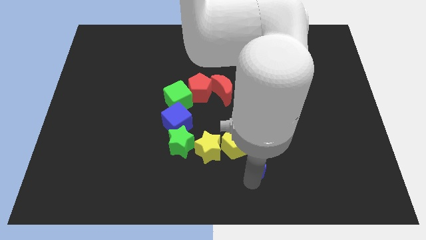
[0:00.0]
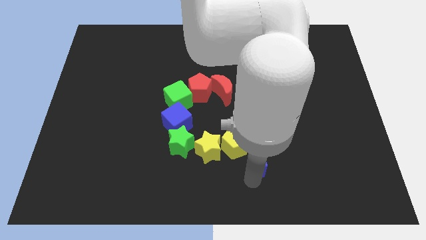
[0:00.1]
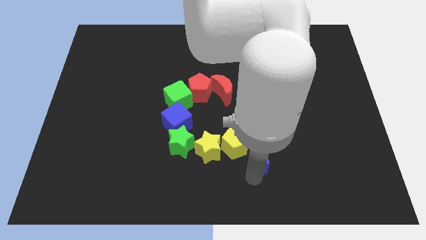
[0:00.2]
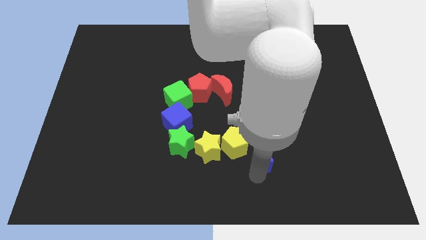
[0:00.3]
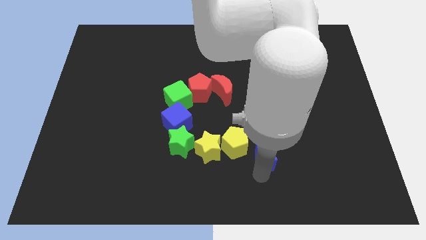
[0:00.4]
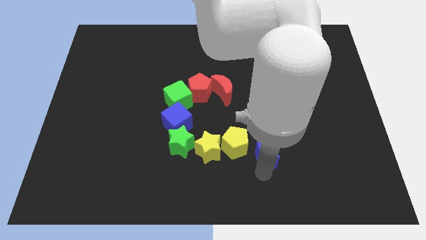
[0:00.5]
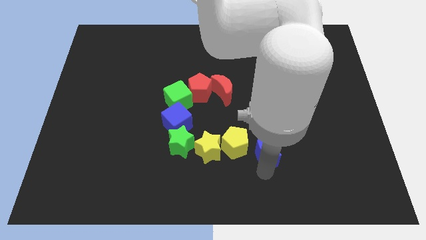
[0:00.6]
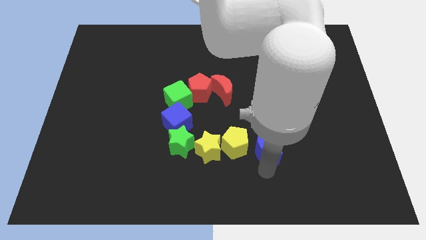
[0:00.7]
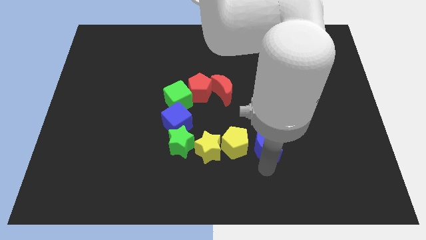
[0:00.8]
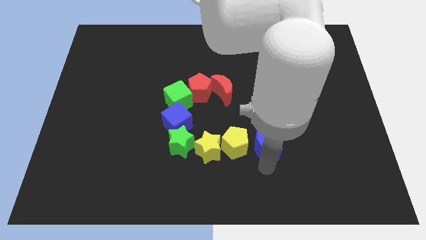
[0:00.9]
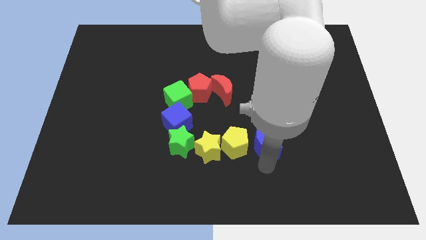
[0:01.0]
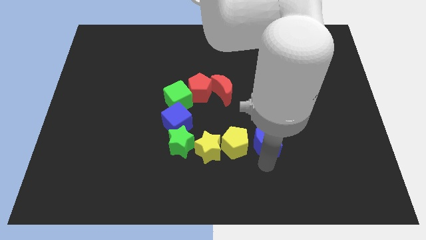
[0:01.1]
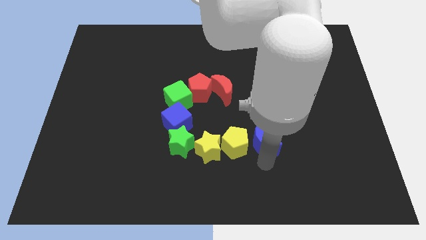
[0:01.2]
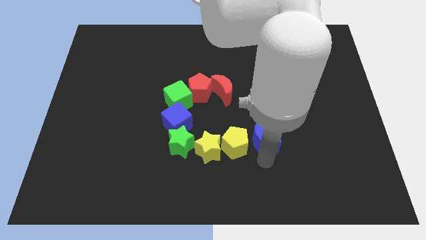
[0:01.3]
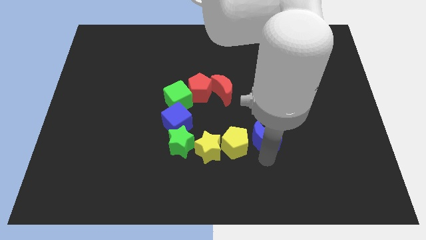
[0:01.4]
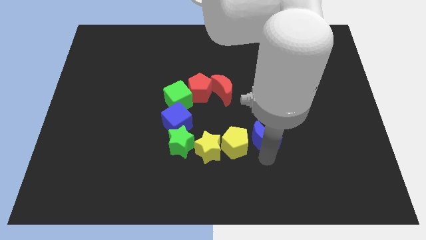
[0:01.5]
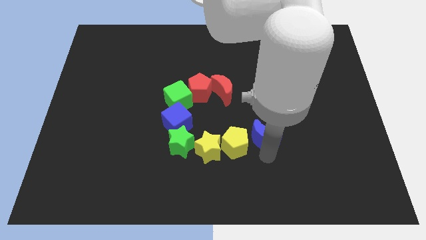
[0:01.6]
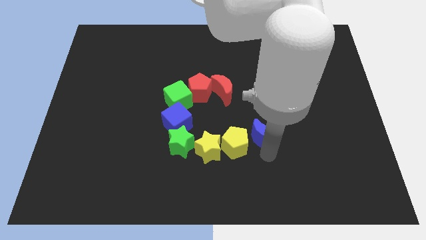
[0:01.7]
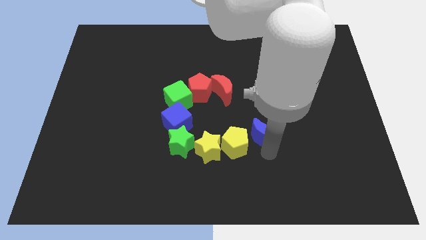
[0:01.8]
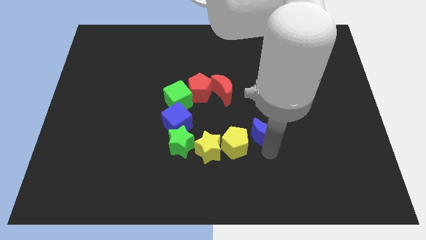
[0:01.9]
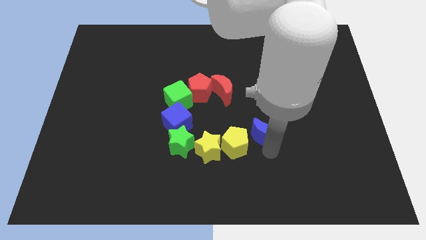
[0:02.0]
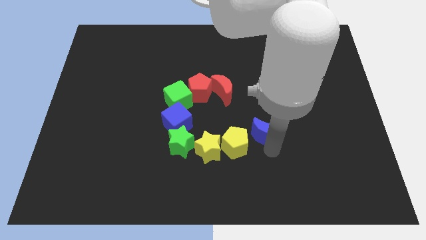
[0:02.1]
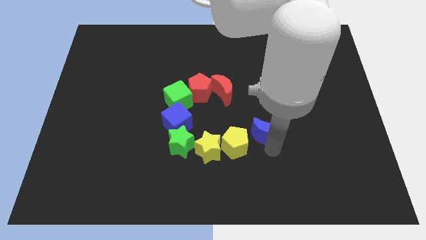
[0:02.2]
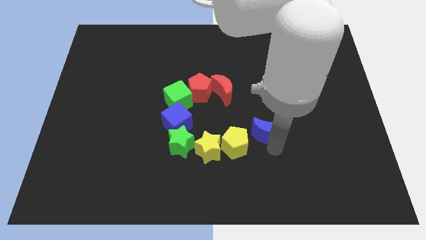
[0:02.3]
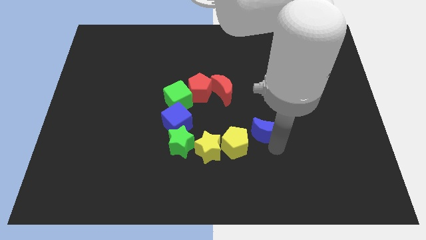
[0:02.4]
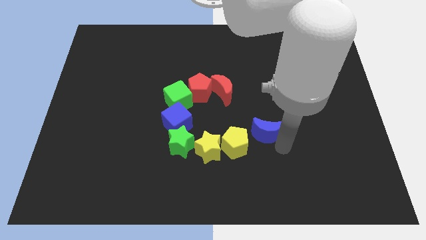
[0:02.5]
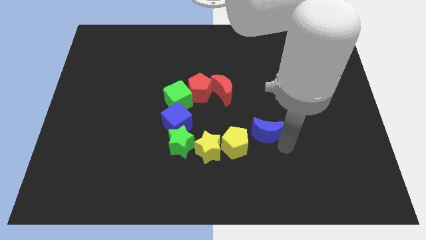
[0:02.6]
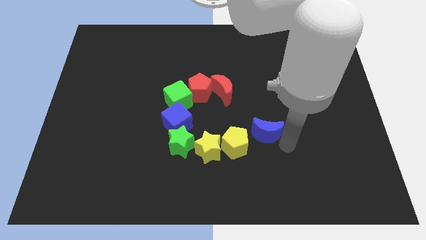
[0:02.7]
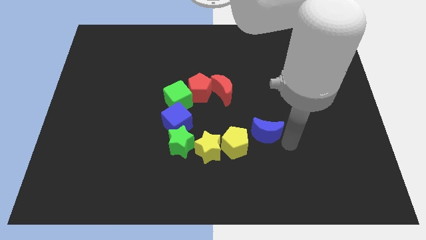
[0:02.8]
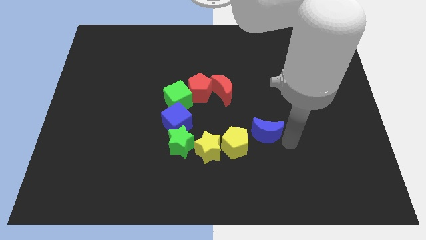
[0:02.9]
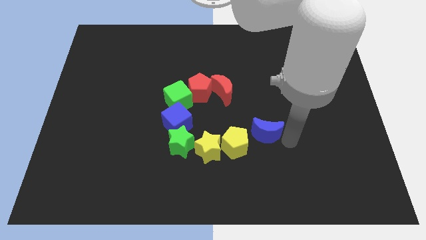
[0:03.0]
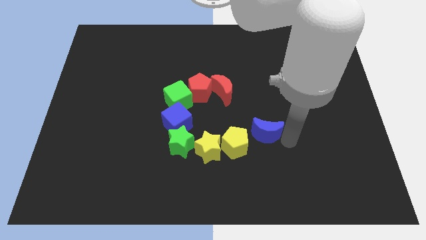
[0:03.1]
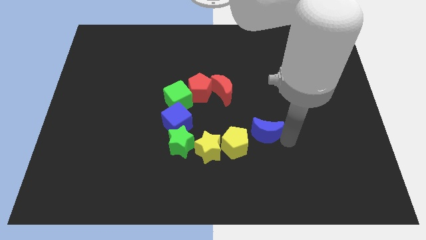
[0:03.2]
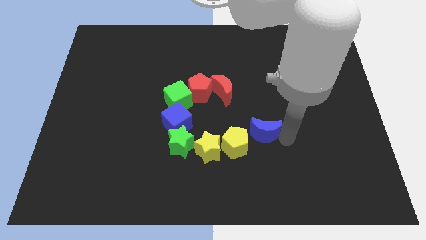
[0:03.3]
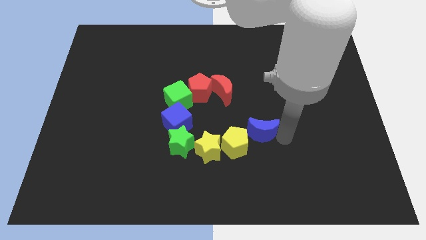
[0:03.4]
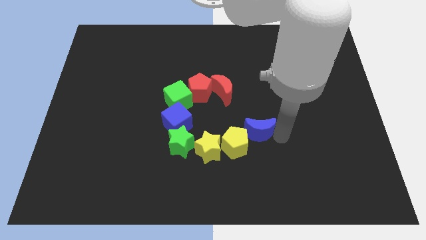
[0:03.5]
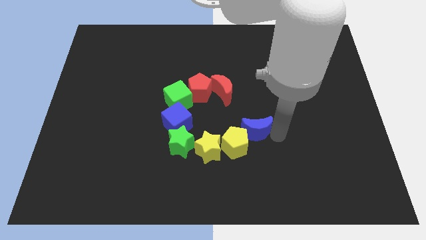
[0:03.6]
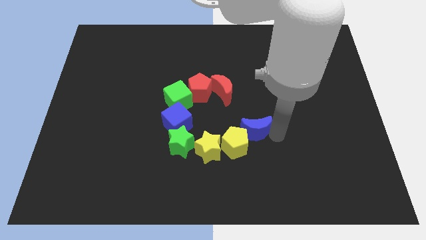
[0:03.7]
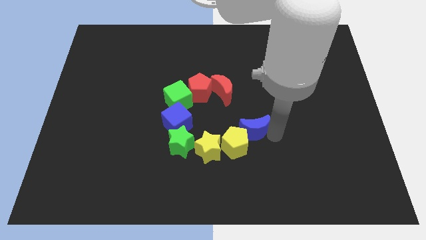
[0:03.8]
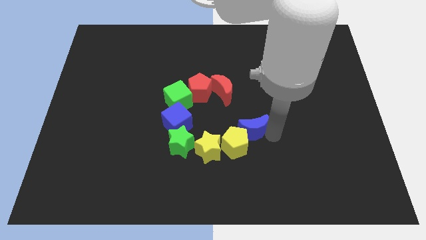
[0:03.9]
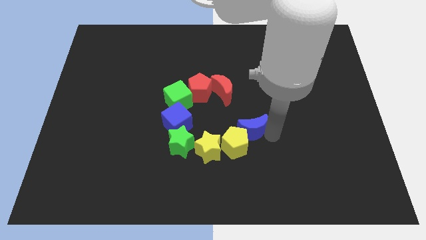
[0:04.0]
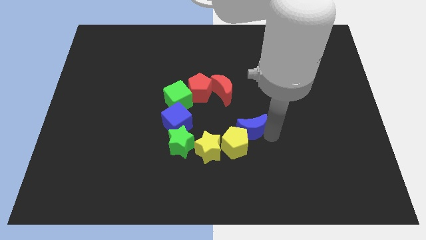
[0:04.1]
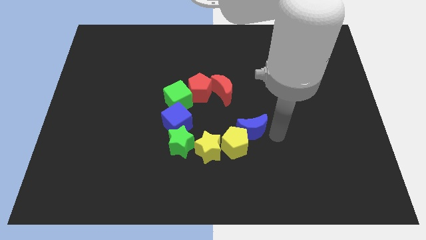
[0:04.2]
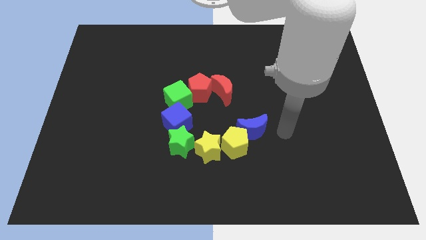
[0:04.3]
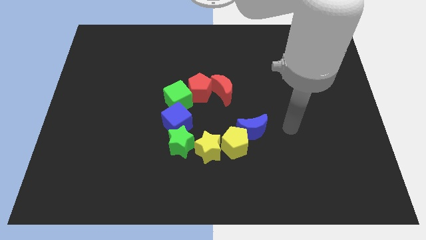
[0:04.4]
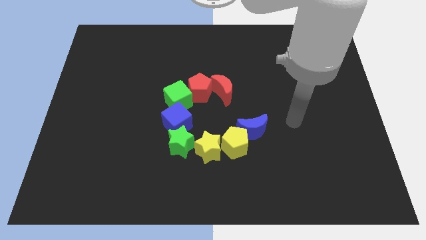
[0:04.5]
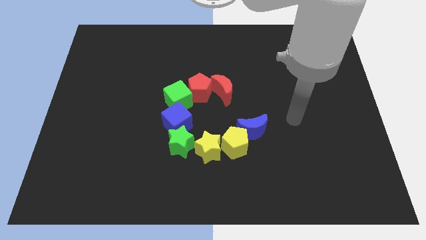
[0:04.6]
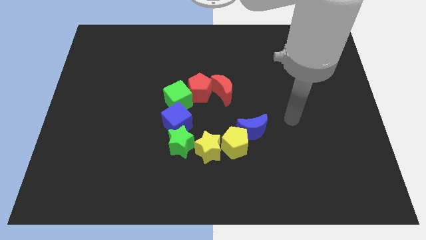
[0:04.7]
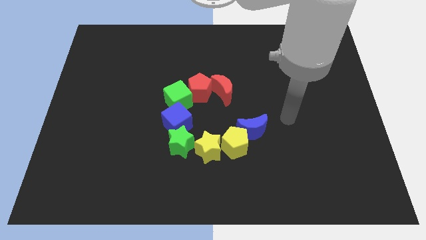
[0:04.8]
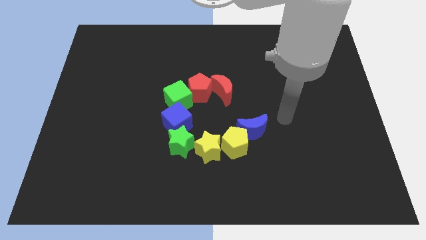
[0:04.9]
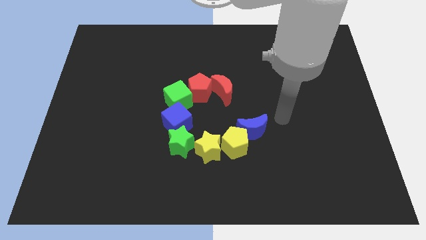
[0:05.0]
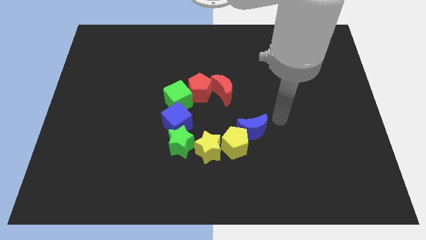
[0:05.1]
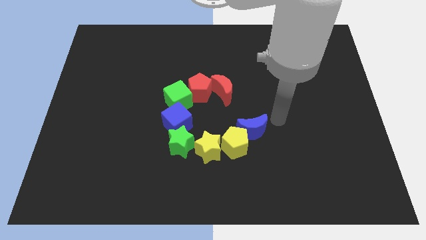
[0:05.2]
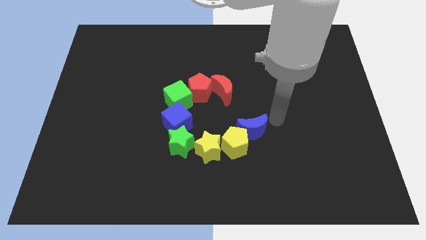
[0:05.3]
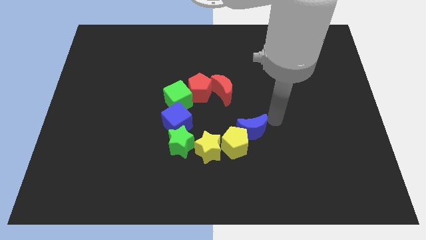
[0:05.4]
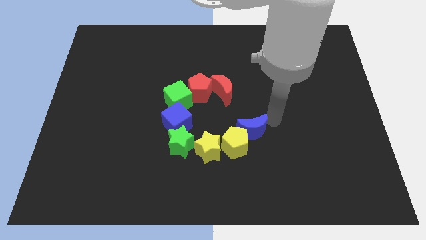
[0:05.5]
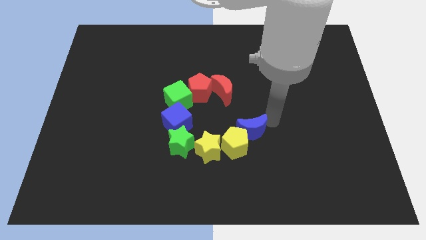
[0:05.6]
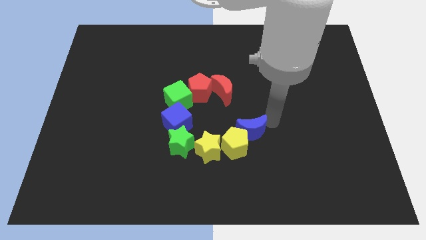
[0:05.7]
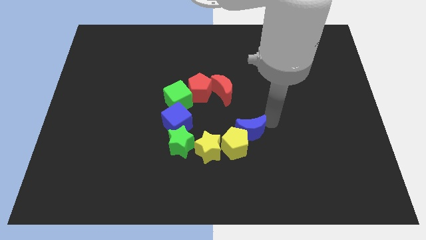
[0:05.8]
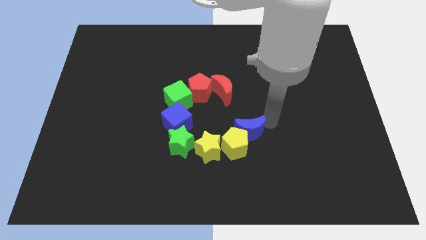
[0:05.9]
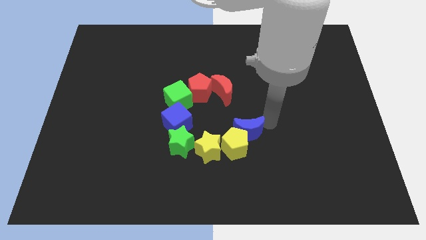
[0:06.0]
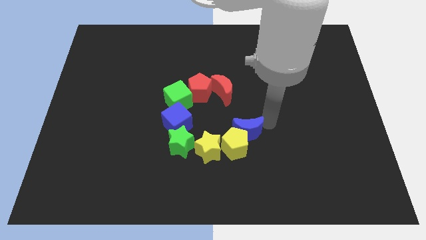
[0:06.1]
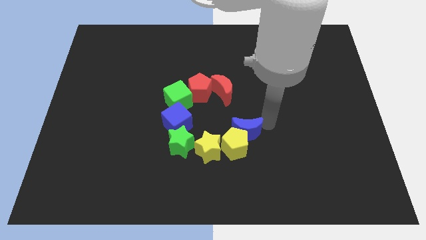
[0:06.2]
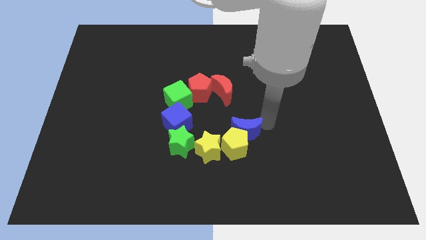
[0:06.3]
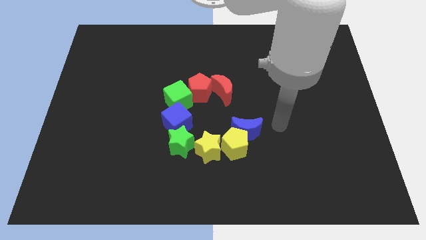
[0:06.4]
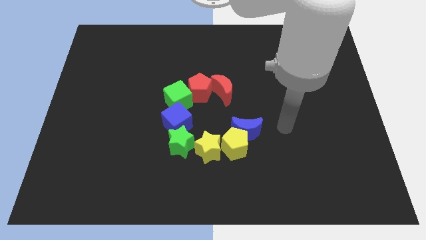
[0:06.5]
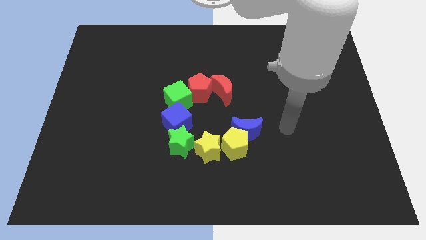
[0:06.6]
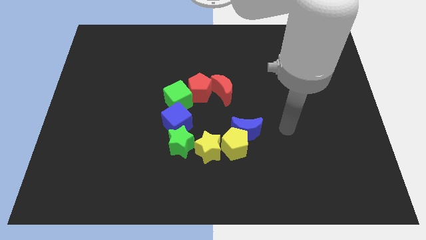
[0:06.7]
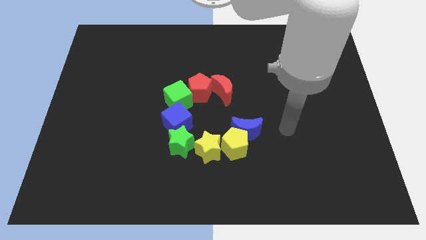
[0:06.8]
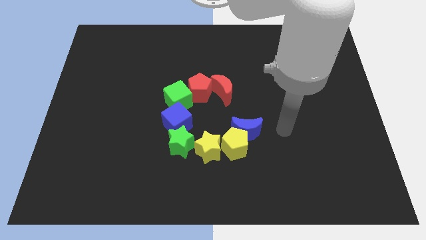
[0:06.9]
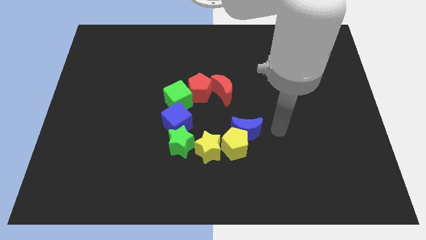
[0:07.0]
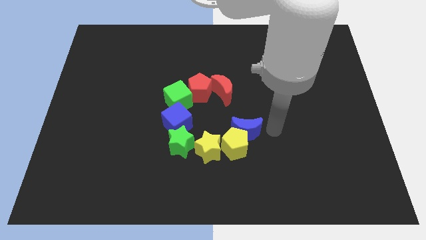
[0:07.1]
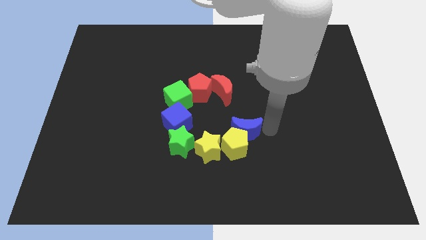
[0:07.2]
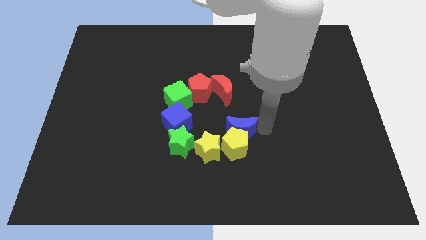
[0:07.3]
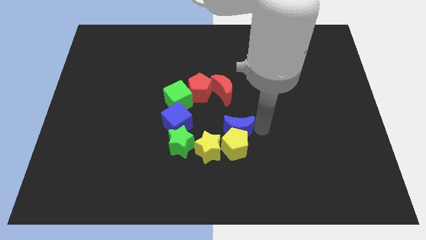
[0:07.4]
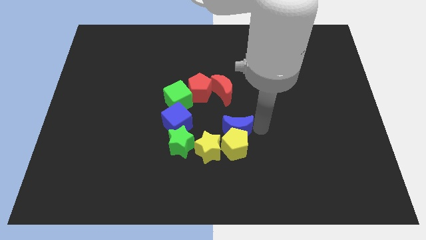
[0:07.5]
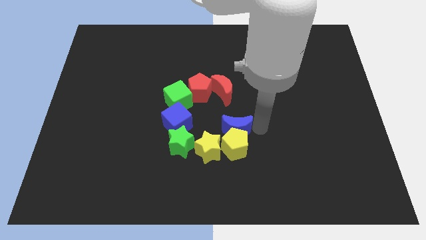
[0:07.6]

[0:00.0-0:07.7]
push the blue crescent to the top of the yellow pentagon

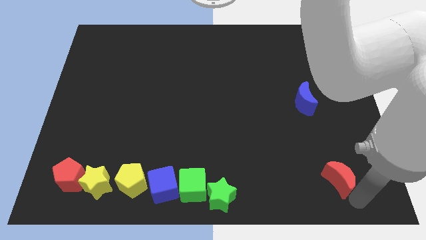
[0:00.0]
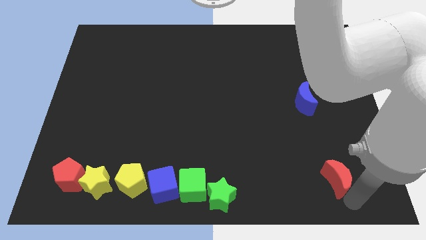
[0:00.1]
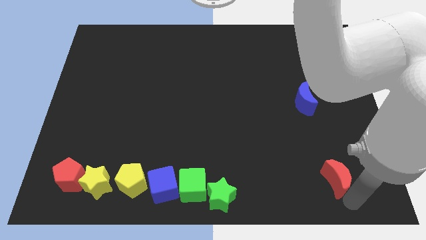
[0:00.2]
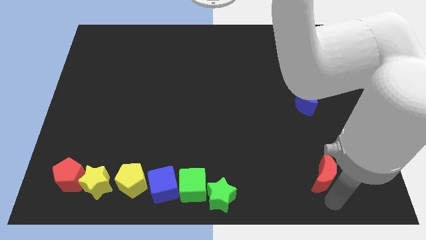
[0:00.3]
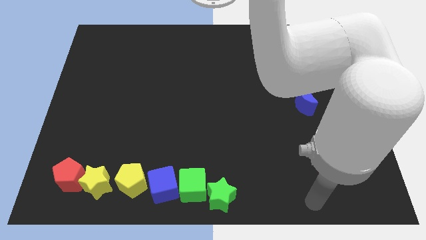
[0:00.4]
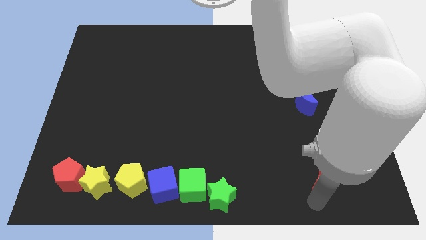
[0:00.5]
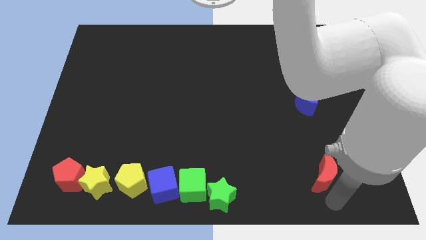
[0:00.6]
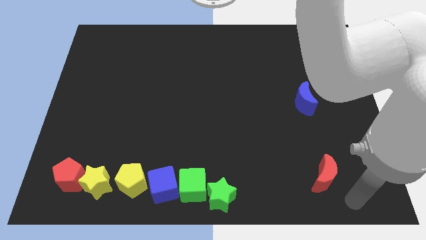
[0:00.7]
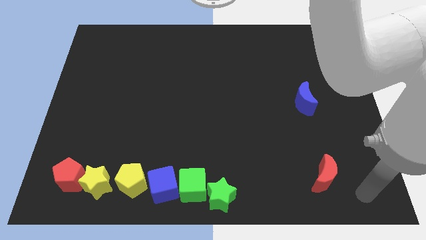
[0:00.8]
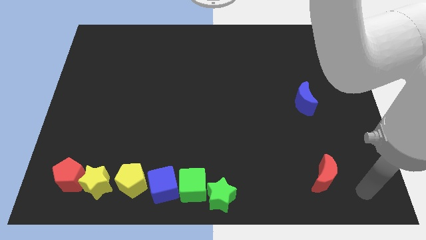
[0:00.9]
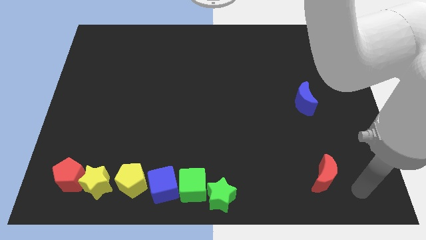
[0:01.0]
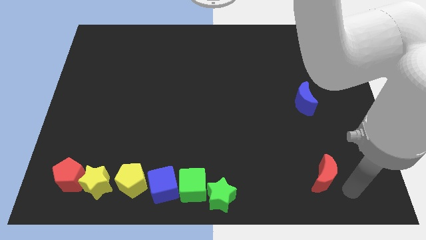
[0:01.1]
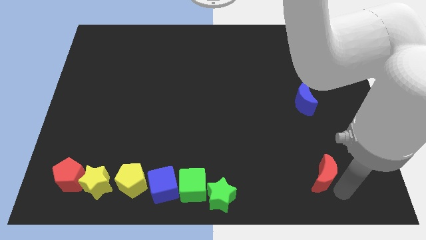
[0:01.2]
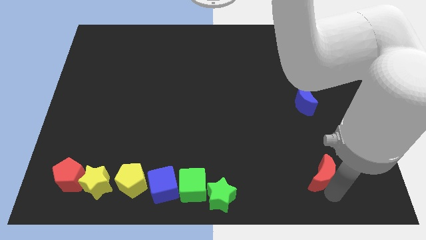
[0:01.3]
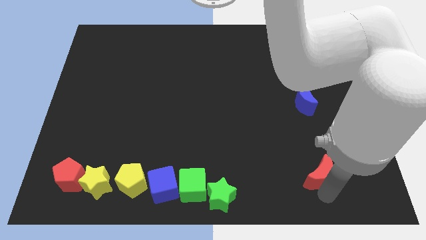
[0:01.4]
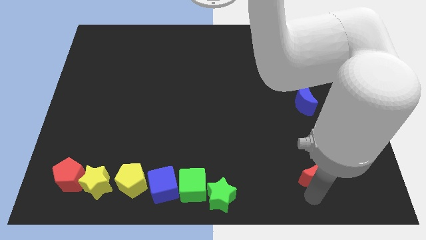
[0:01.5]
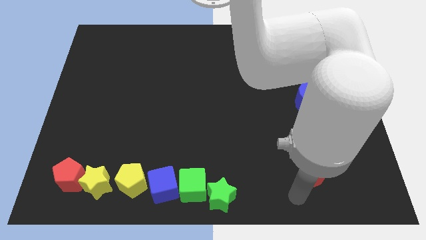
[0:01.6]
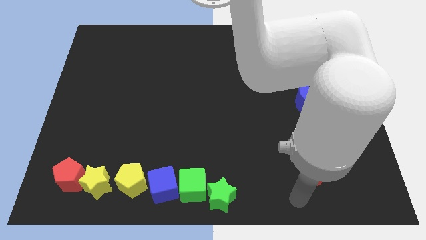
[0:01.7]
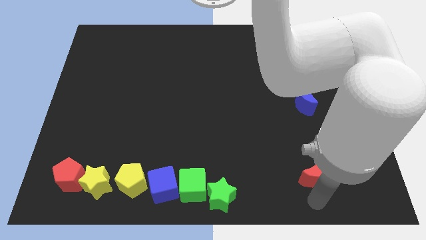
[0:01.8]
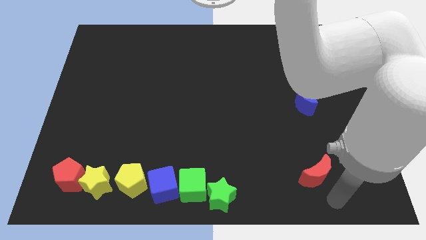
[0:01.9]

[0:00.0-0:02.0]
turn the red moon below the blue moon
